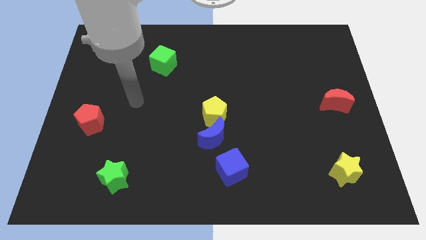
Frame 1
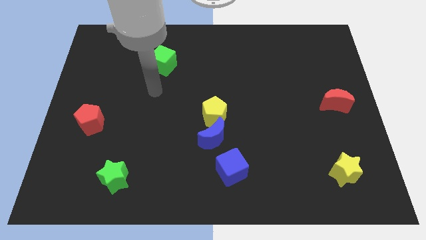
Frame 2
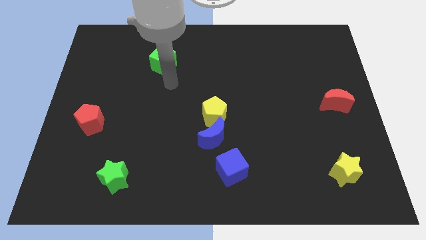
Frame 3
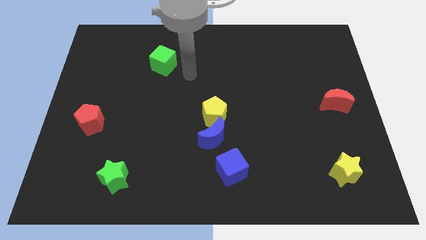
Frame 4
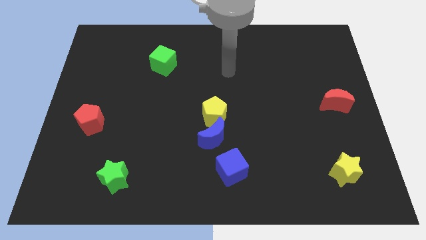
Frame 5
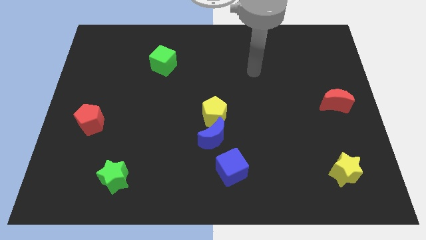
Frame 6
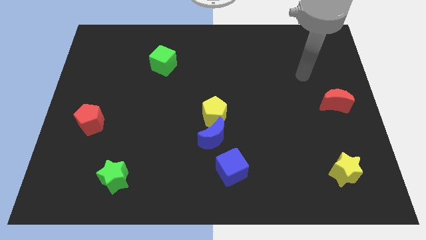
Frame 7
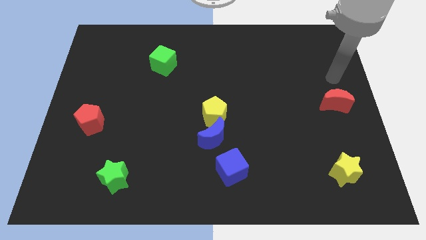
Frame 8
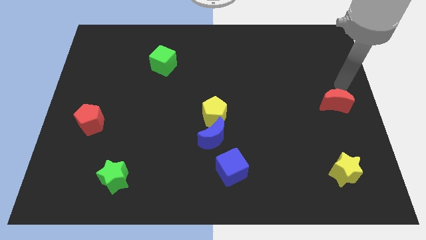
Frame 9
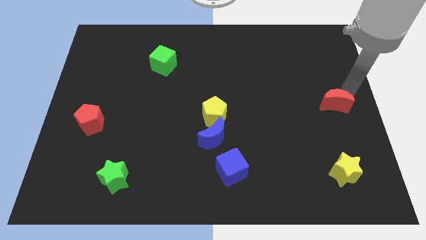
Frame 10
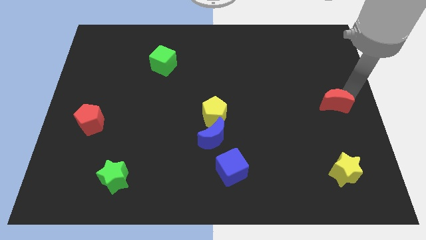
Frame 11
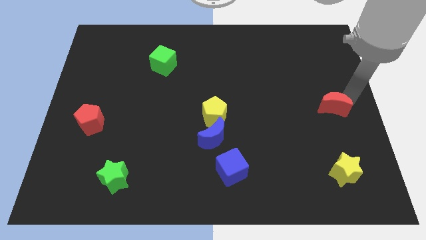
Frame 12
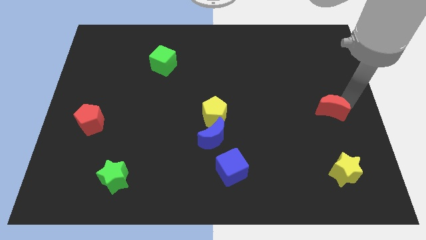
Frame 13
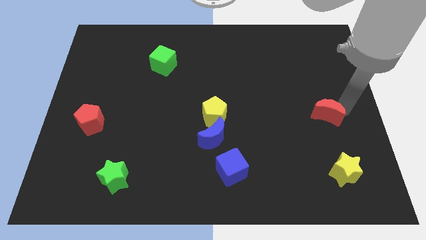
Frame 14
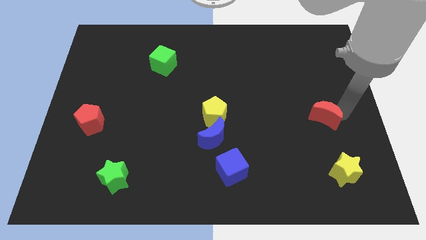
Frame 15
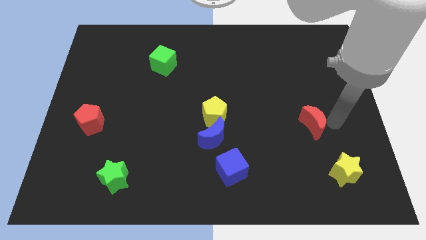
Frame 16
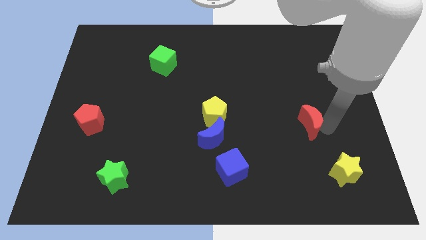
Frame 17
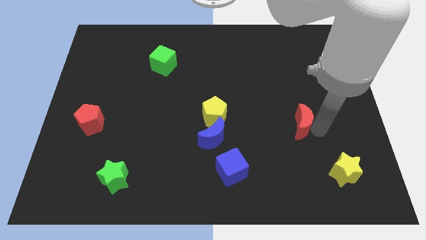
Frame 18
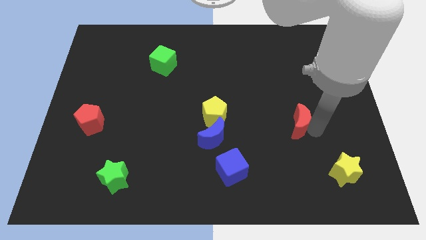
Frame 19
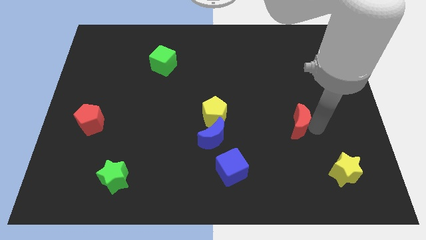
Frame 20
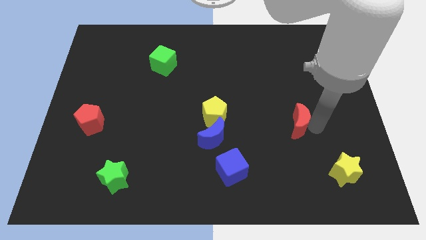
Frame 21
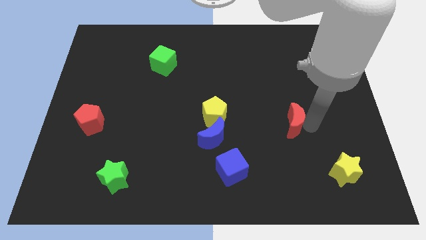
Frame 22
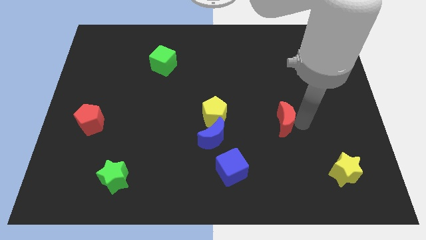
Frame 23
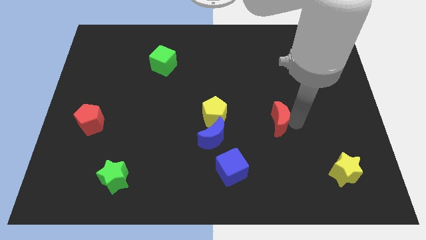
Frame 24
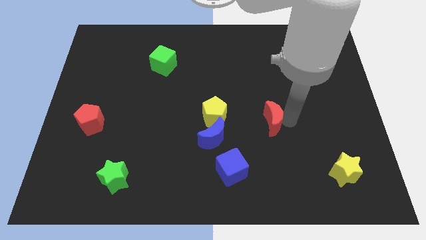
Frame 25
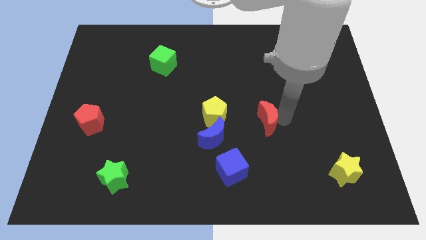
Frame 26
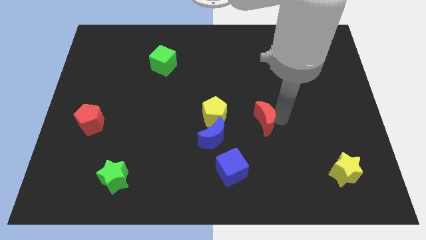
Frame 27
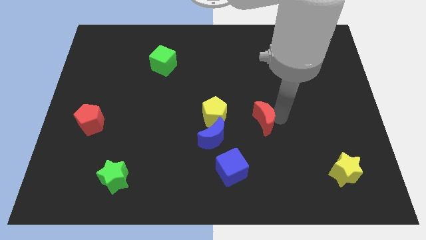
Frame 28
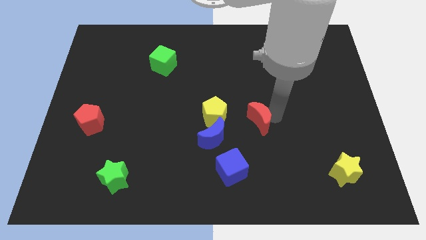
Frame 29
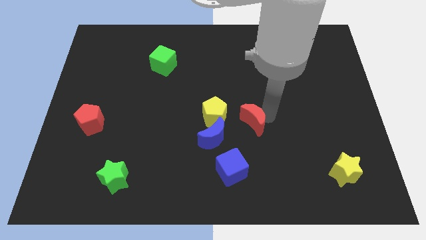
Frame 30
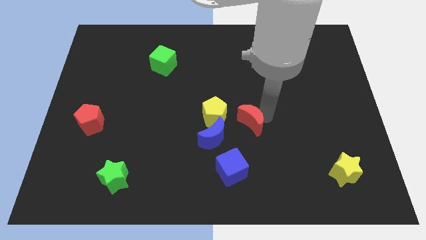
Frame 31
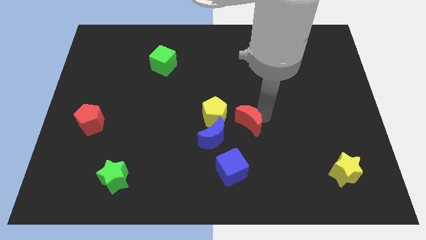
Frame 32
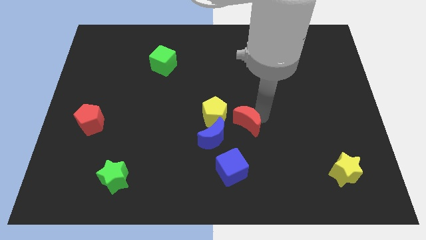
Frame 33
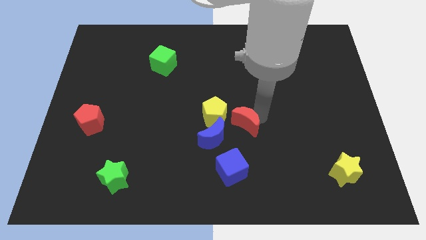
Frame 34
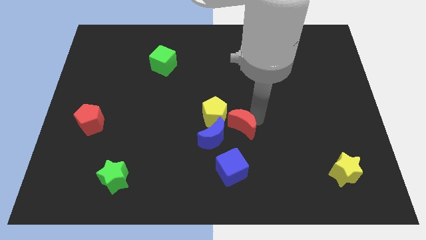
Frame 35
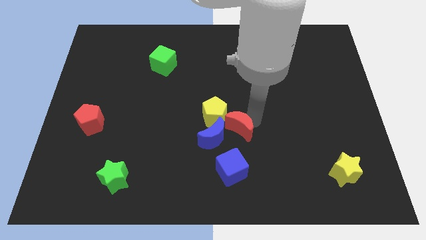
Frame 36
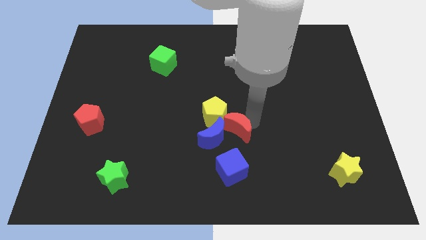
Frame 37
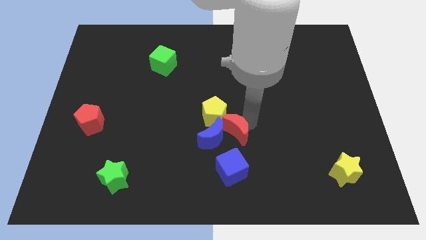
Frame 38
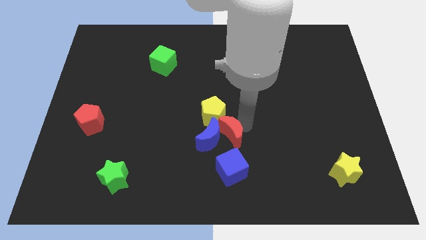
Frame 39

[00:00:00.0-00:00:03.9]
push the red moon towards the blue moon

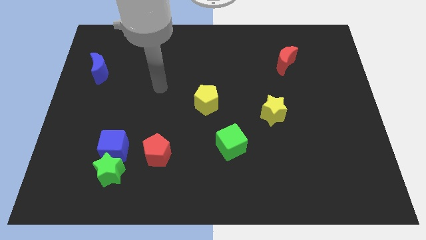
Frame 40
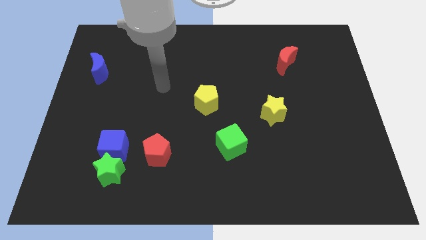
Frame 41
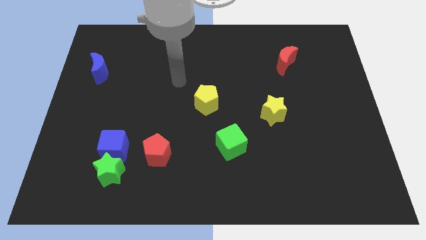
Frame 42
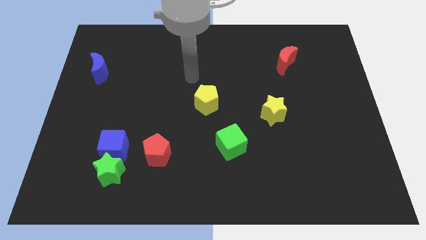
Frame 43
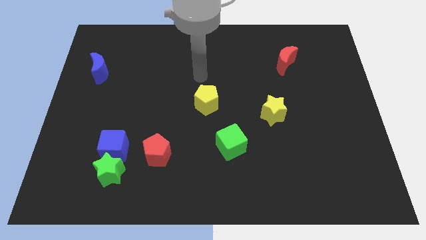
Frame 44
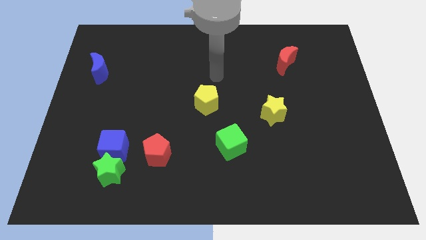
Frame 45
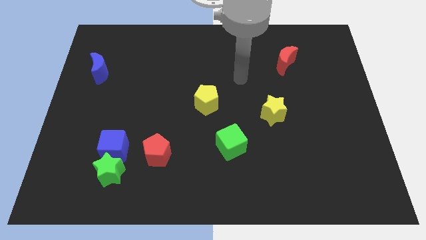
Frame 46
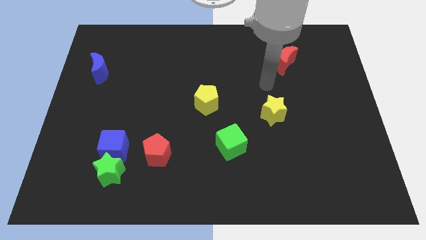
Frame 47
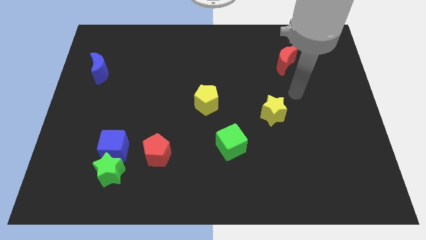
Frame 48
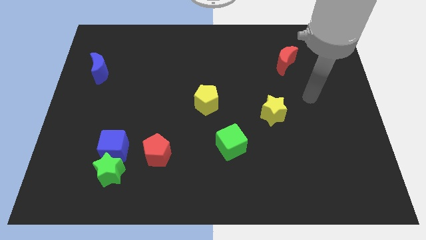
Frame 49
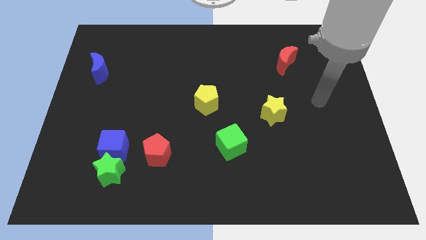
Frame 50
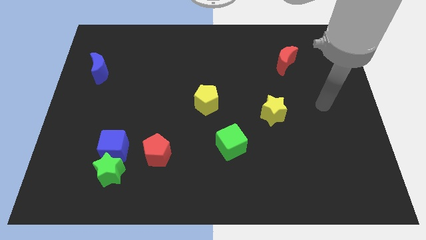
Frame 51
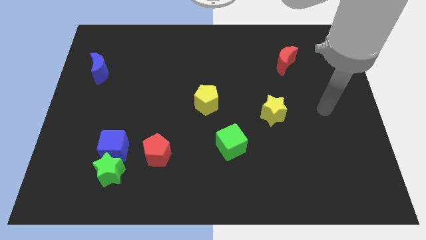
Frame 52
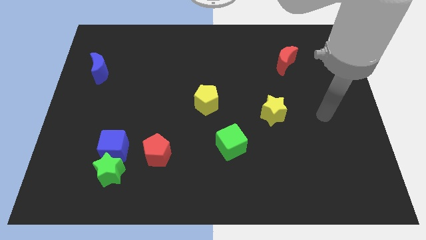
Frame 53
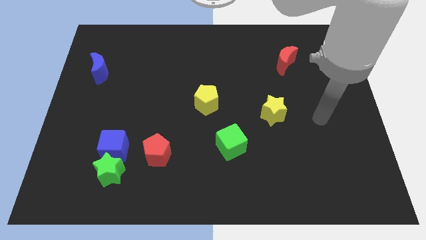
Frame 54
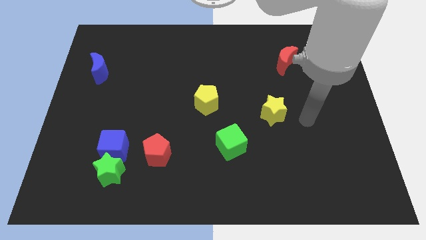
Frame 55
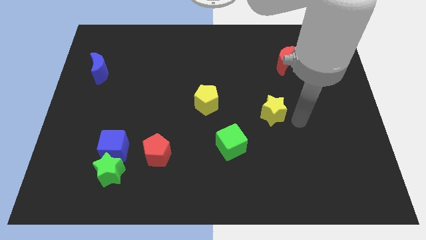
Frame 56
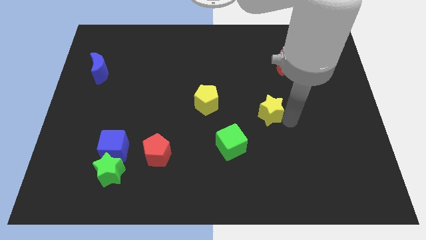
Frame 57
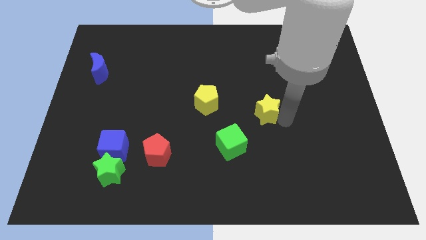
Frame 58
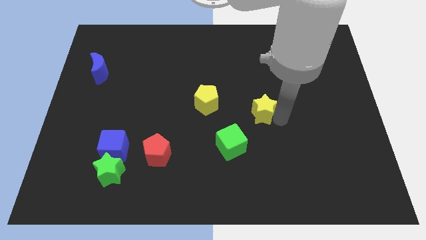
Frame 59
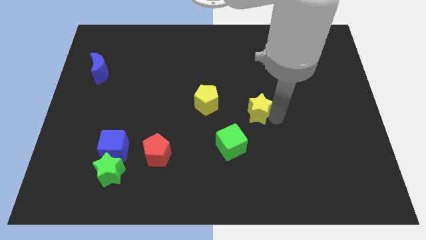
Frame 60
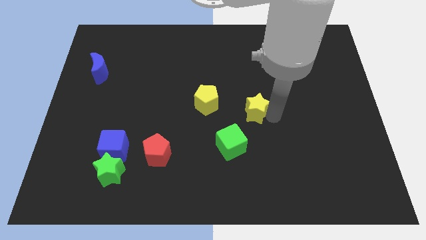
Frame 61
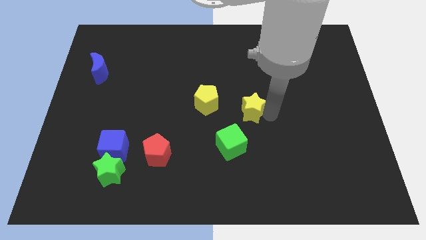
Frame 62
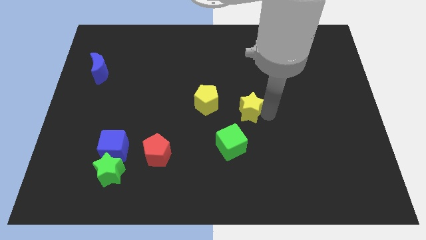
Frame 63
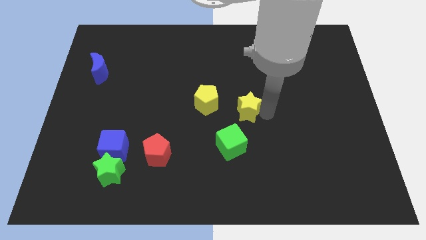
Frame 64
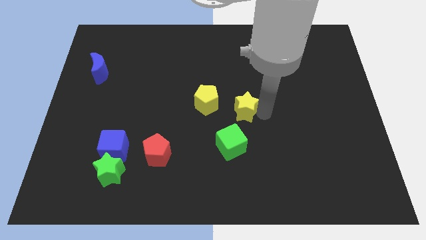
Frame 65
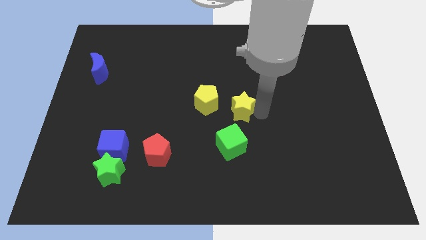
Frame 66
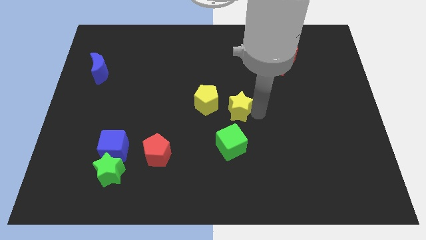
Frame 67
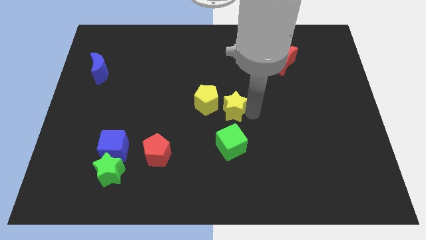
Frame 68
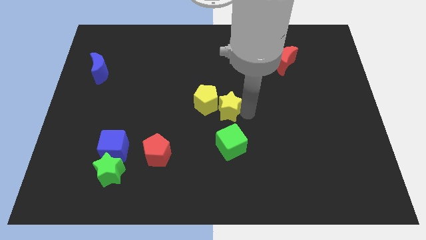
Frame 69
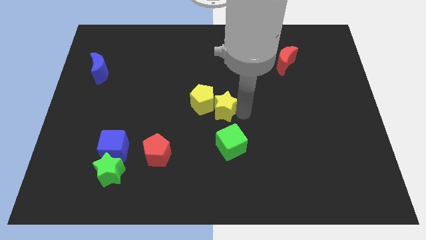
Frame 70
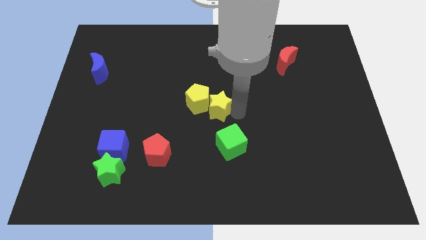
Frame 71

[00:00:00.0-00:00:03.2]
put the yellow star towards the yellow pentagon

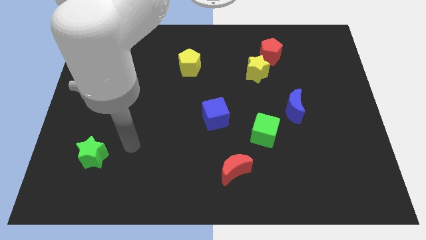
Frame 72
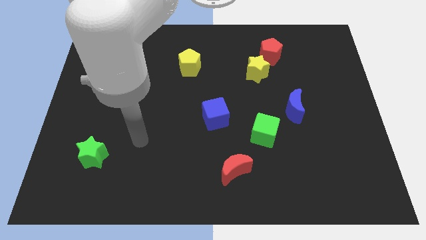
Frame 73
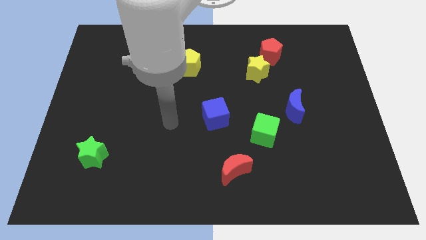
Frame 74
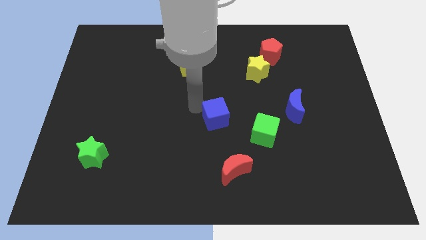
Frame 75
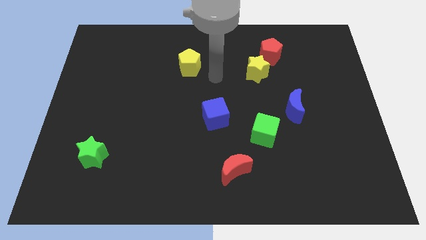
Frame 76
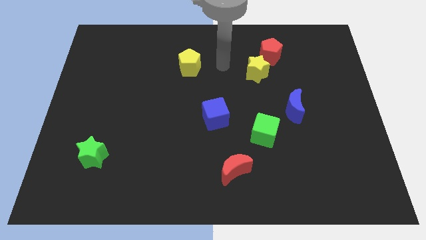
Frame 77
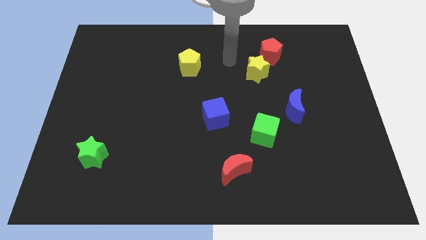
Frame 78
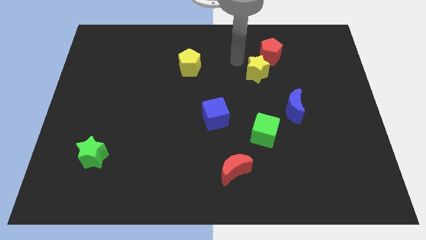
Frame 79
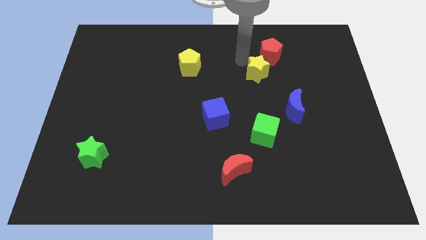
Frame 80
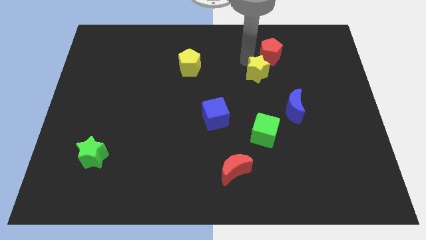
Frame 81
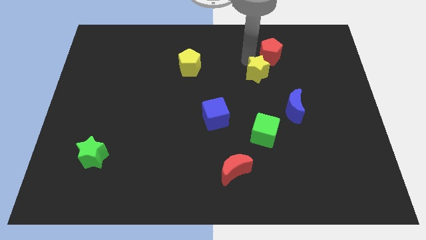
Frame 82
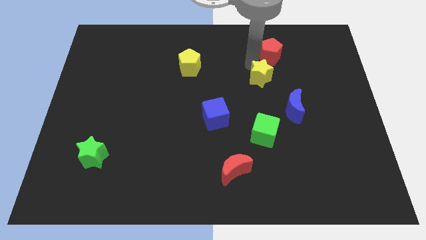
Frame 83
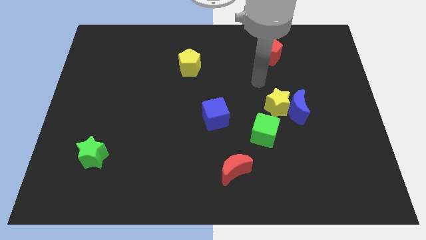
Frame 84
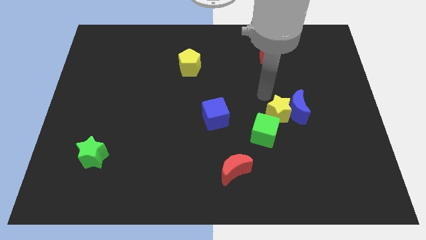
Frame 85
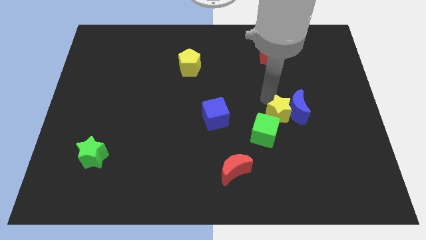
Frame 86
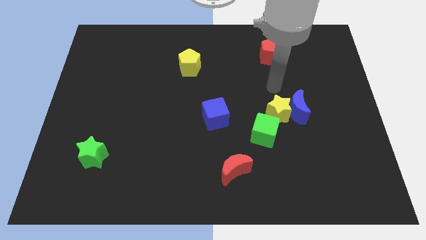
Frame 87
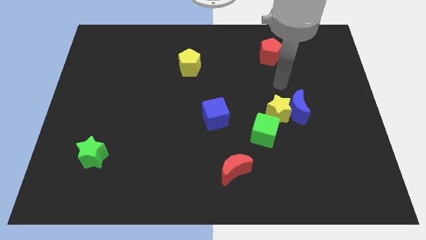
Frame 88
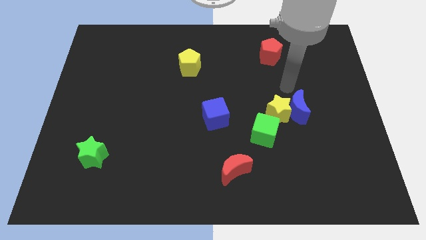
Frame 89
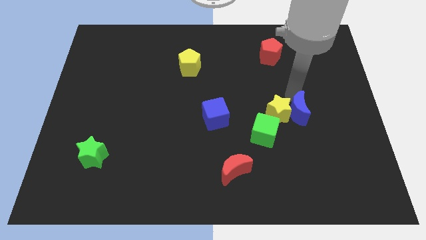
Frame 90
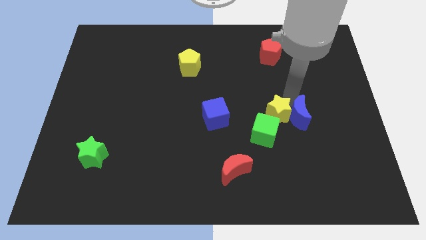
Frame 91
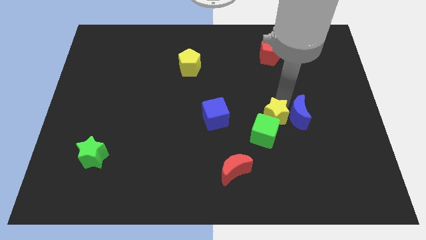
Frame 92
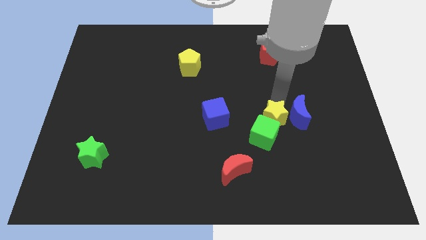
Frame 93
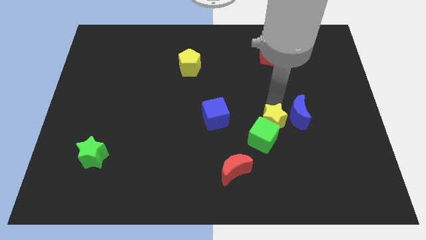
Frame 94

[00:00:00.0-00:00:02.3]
move the yellow star to the green cube
